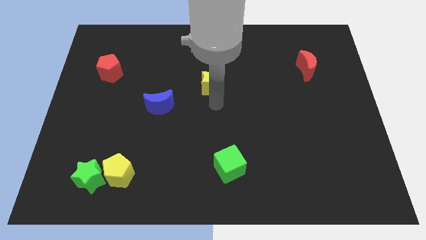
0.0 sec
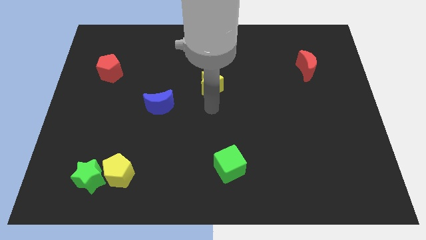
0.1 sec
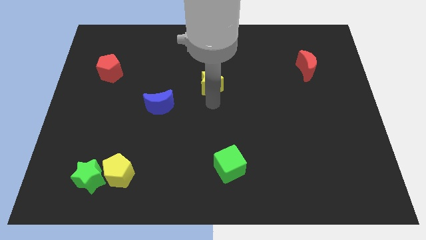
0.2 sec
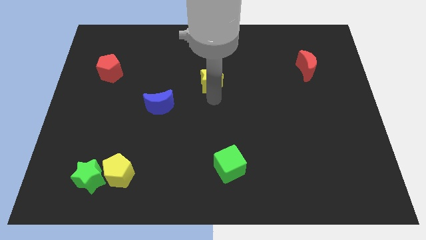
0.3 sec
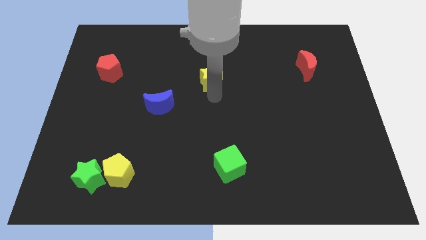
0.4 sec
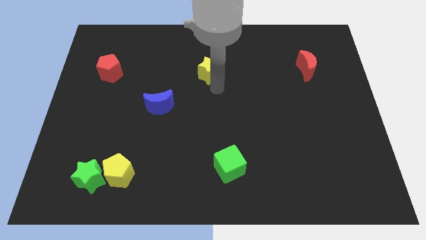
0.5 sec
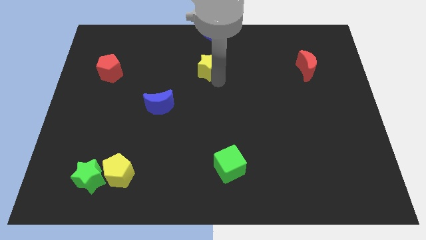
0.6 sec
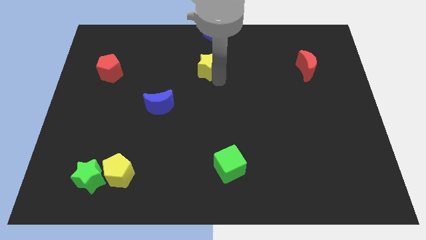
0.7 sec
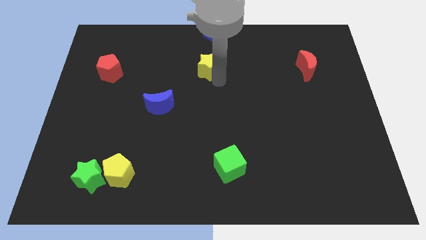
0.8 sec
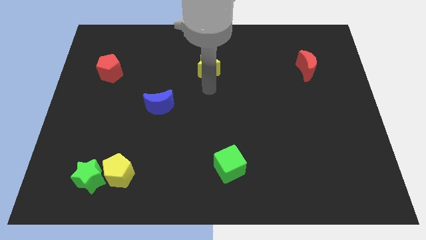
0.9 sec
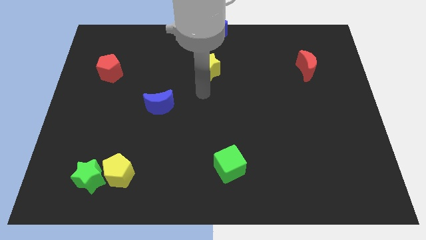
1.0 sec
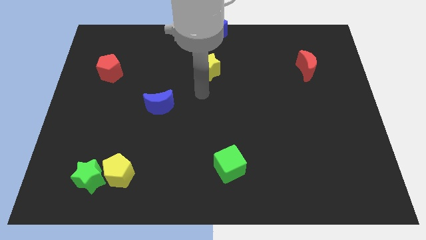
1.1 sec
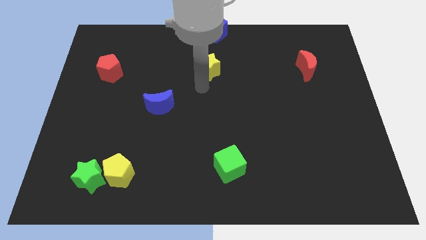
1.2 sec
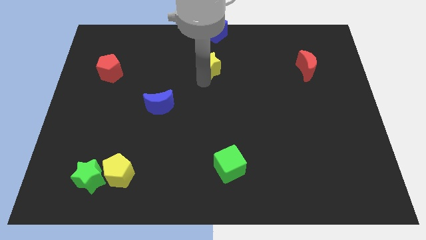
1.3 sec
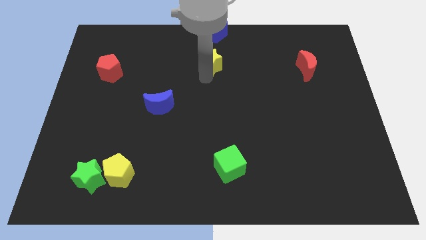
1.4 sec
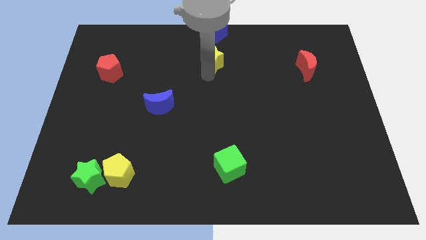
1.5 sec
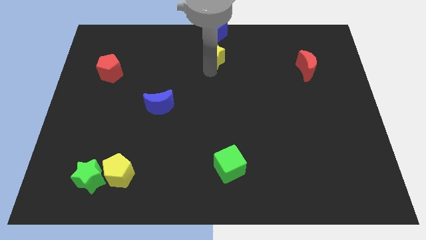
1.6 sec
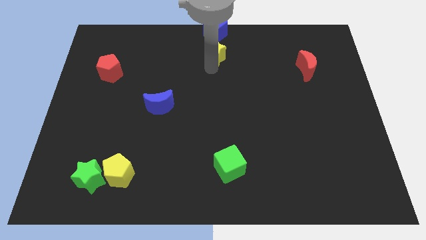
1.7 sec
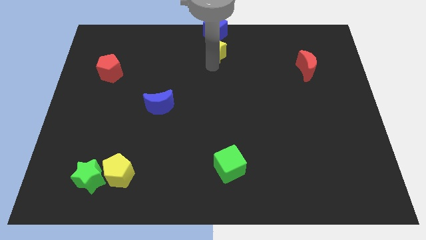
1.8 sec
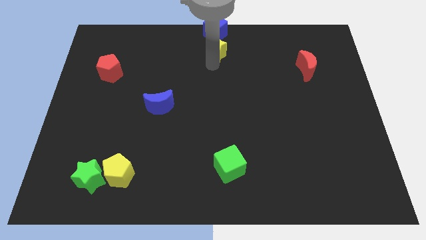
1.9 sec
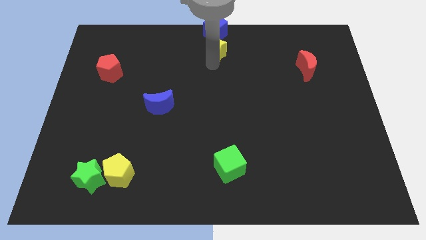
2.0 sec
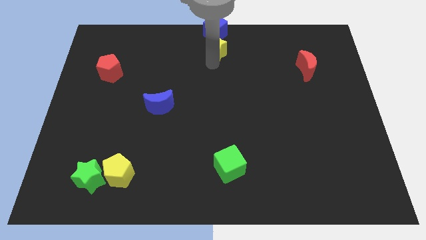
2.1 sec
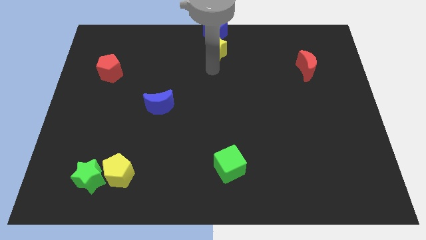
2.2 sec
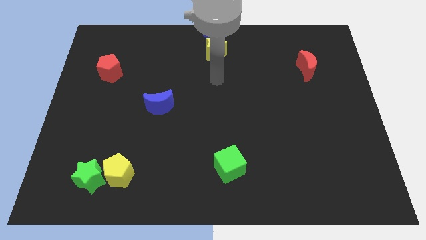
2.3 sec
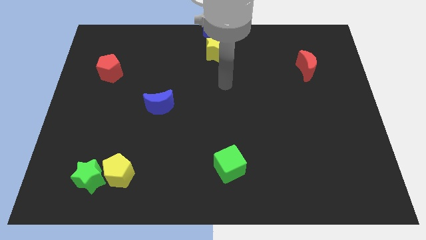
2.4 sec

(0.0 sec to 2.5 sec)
place the yellow star below the blue cube

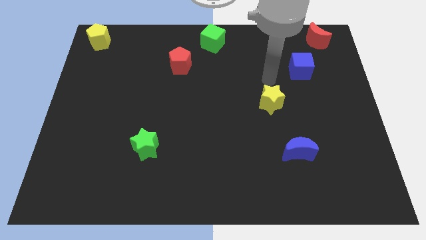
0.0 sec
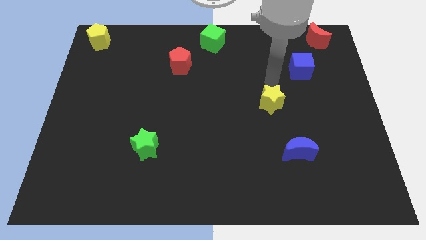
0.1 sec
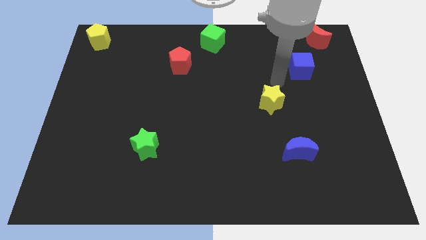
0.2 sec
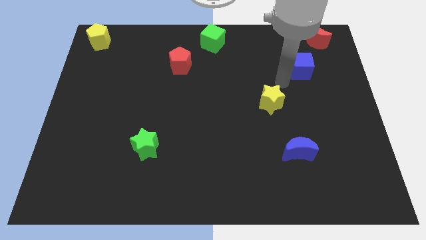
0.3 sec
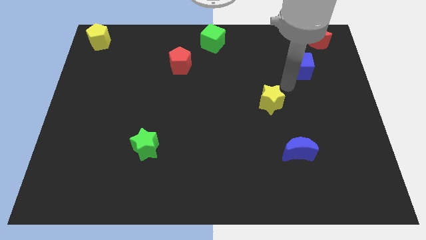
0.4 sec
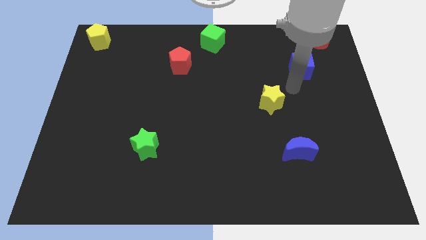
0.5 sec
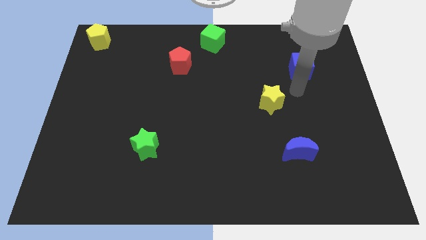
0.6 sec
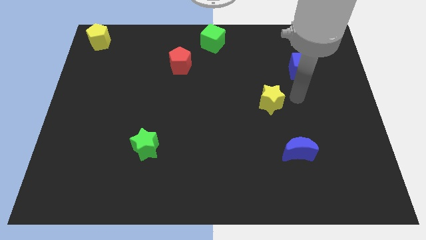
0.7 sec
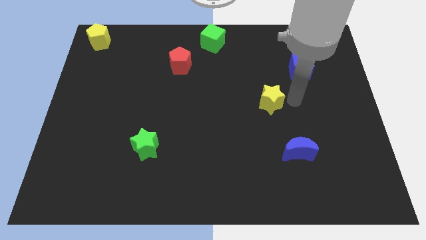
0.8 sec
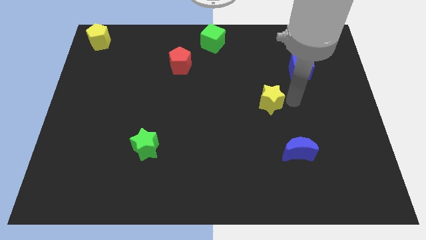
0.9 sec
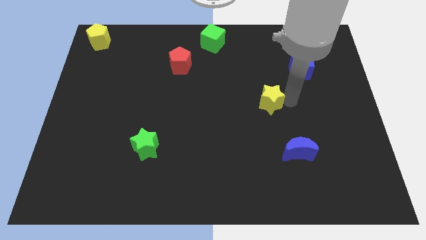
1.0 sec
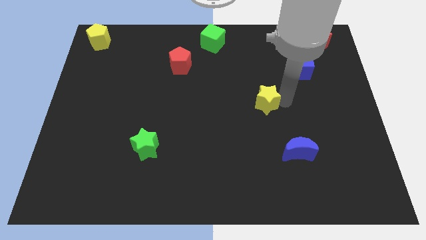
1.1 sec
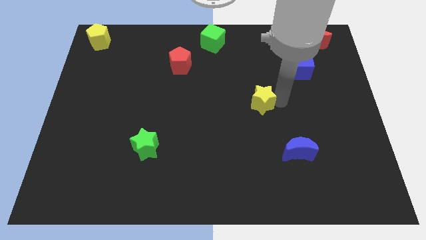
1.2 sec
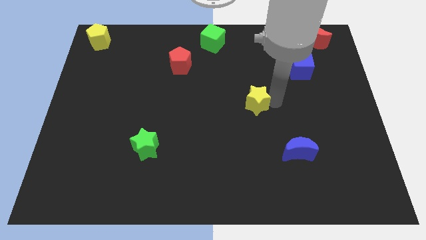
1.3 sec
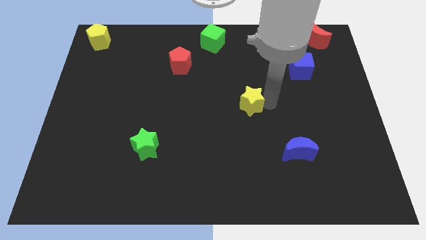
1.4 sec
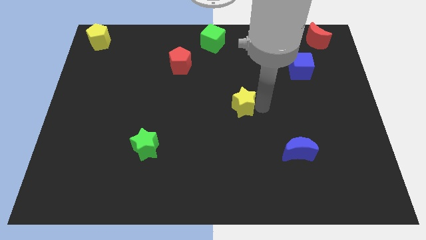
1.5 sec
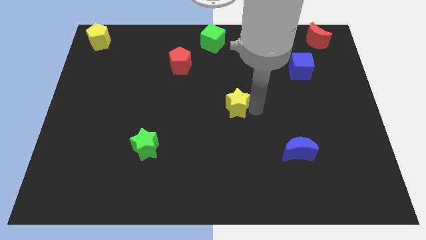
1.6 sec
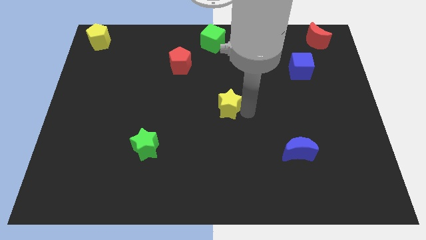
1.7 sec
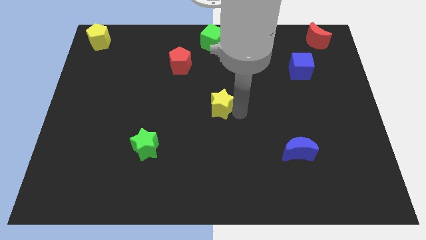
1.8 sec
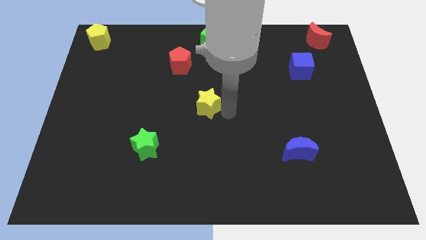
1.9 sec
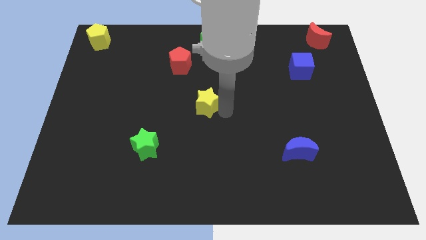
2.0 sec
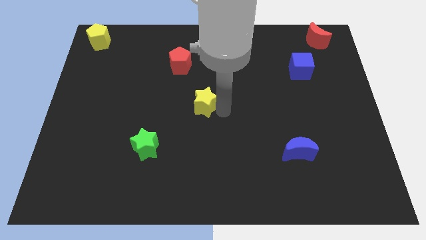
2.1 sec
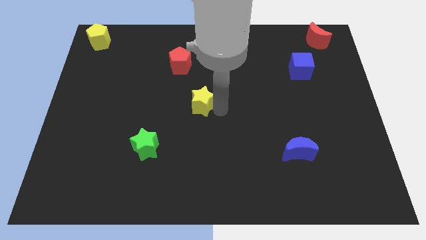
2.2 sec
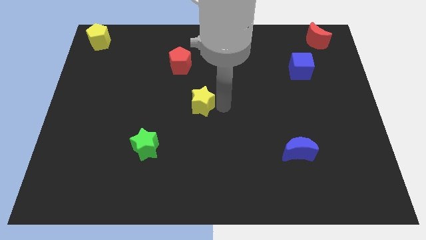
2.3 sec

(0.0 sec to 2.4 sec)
place the yellow pentagon at center of the board

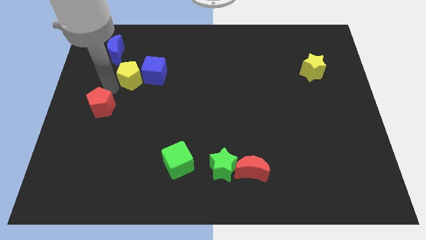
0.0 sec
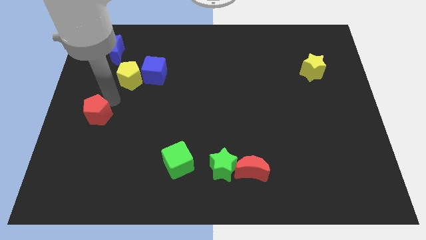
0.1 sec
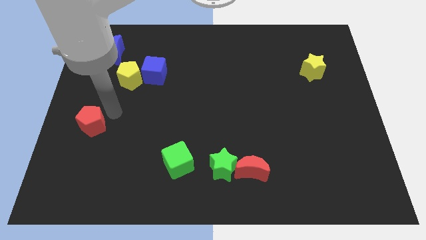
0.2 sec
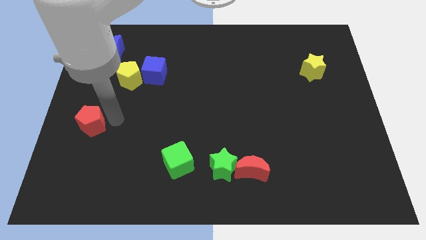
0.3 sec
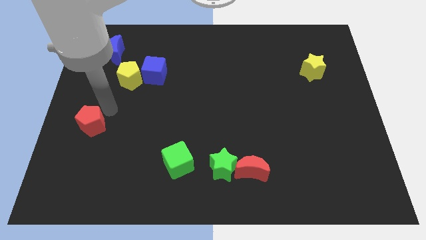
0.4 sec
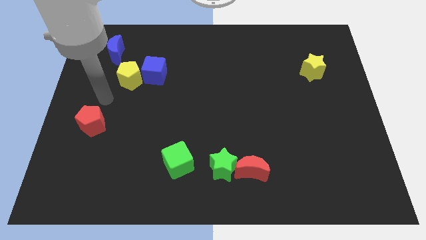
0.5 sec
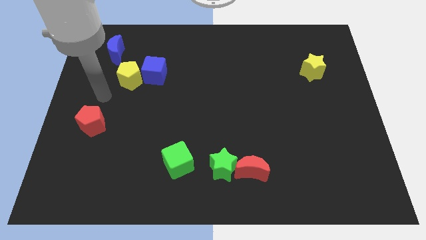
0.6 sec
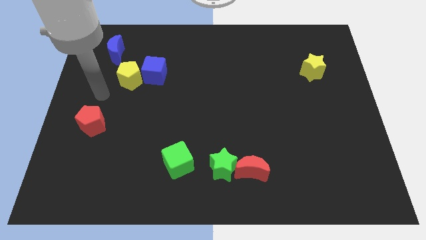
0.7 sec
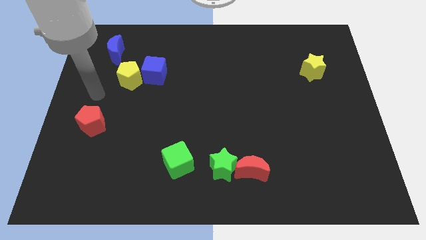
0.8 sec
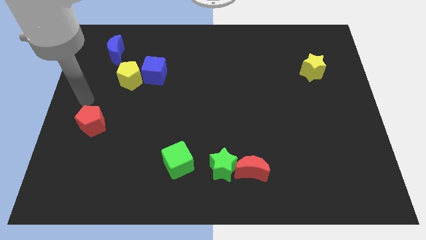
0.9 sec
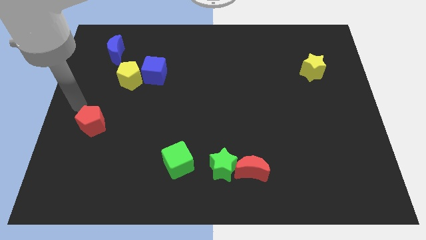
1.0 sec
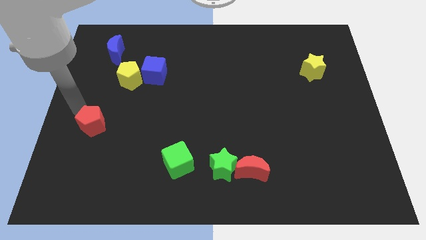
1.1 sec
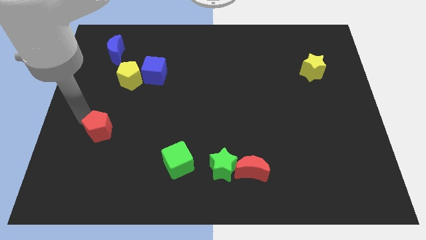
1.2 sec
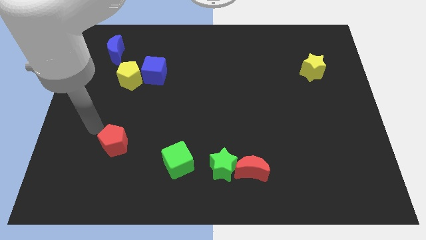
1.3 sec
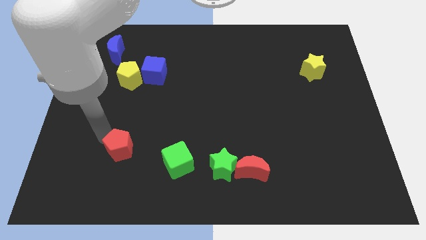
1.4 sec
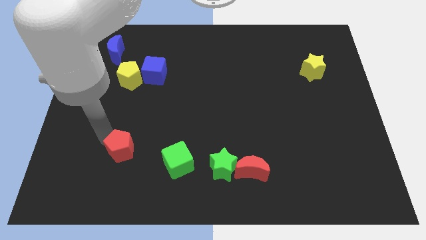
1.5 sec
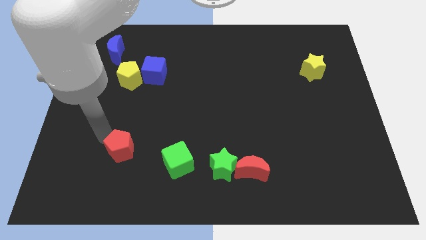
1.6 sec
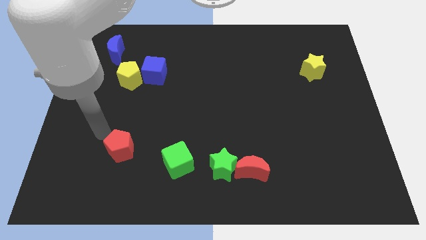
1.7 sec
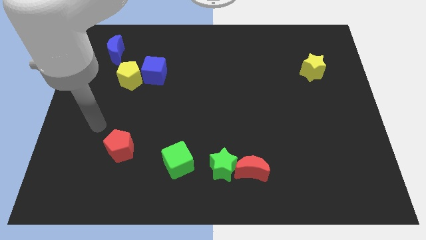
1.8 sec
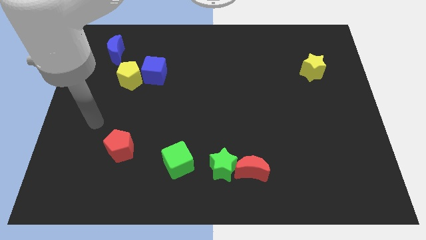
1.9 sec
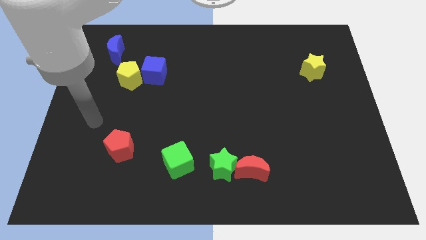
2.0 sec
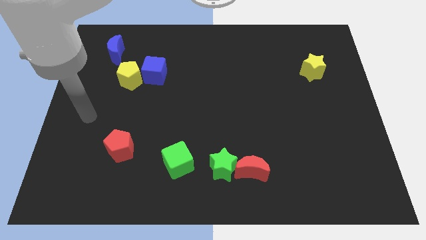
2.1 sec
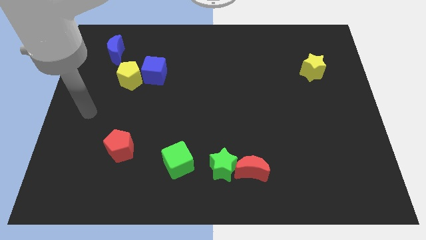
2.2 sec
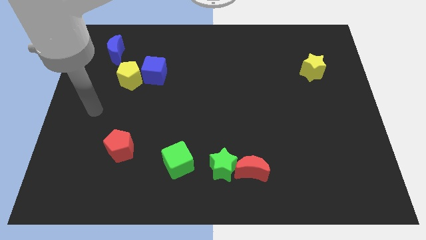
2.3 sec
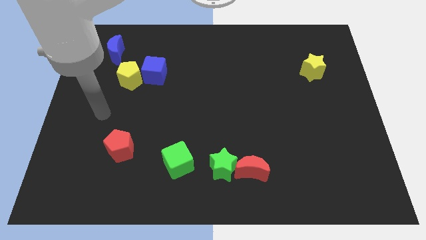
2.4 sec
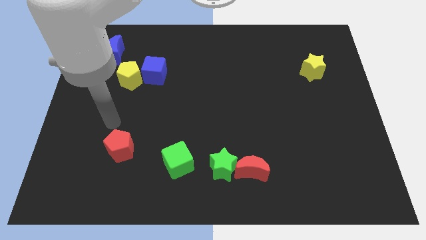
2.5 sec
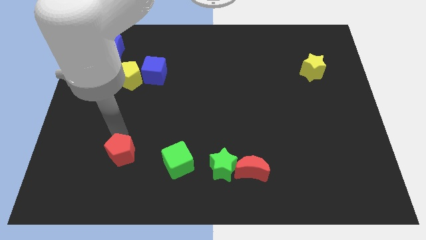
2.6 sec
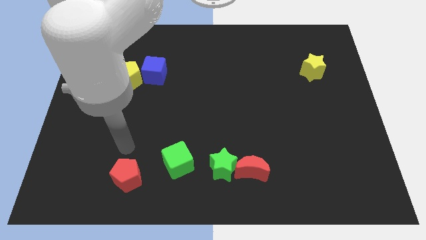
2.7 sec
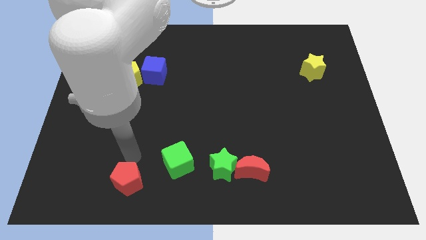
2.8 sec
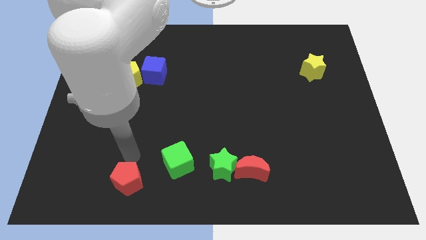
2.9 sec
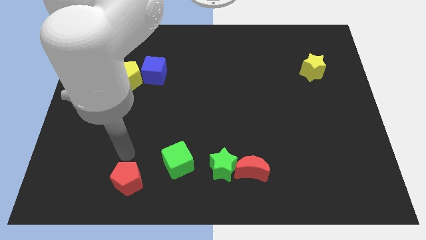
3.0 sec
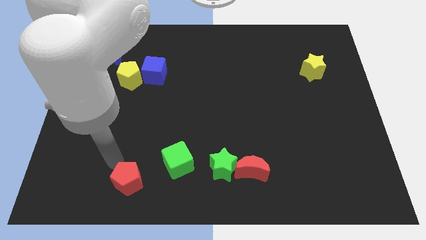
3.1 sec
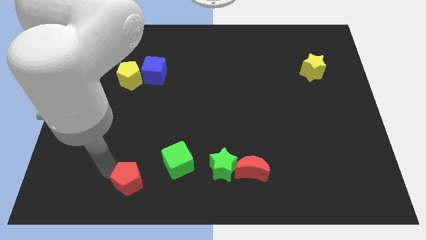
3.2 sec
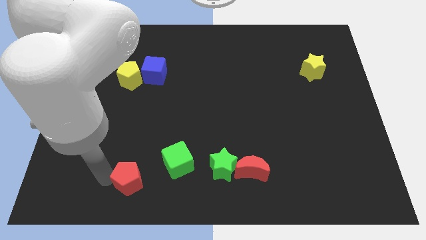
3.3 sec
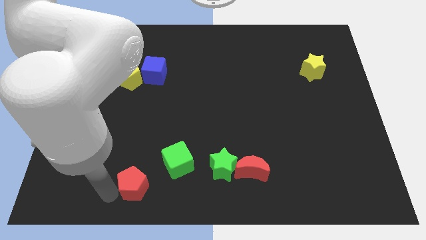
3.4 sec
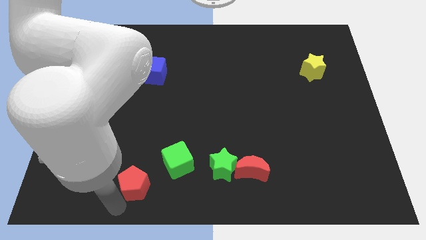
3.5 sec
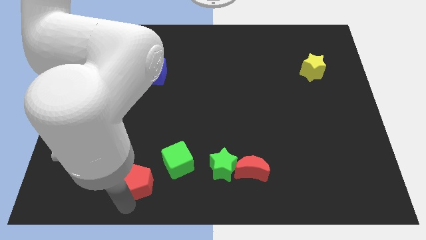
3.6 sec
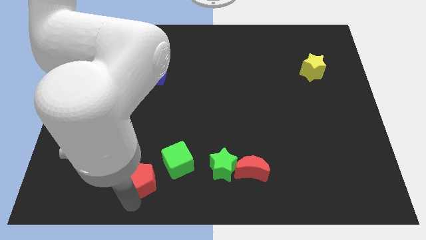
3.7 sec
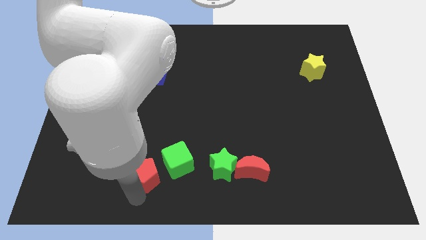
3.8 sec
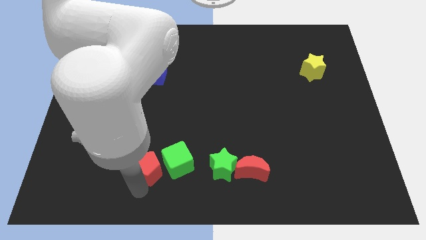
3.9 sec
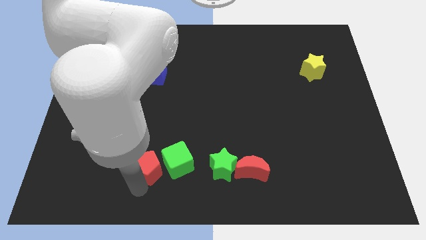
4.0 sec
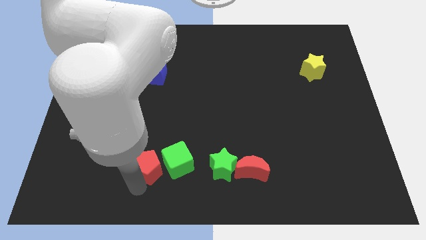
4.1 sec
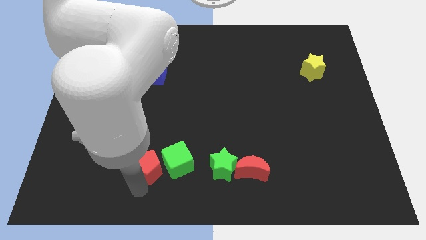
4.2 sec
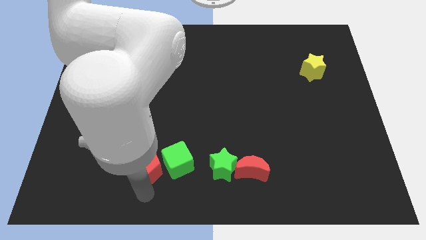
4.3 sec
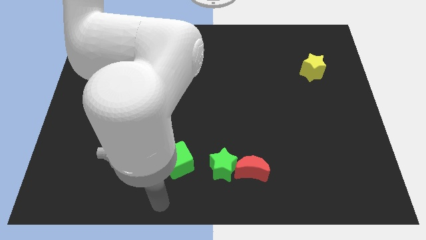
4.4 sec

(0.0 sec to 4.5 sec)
place red pentagon left to the green cube
